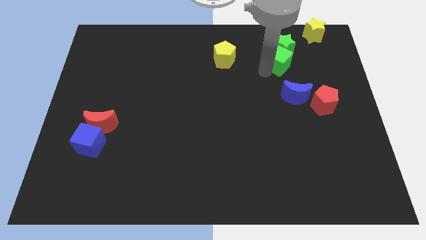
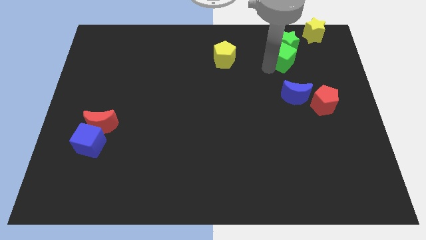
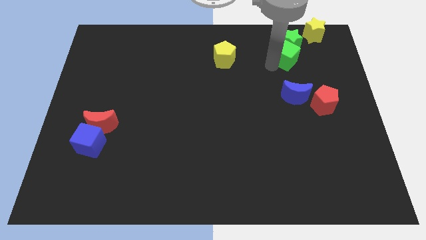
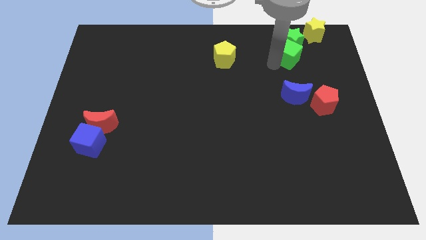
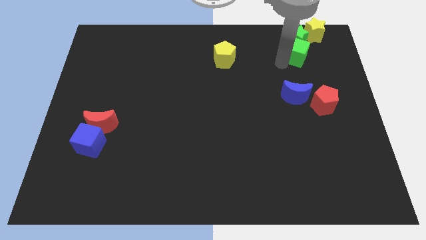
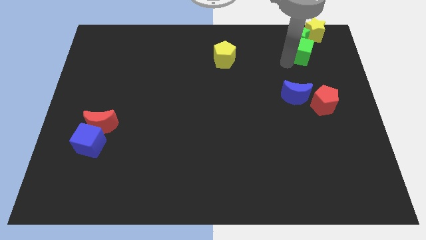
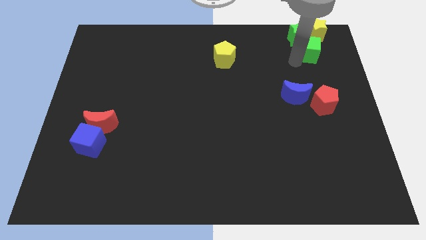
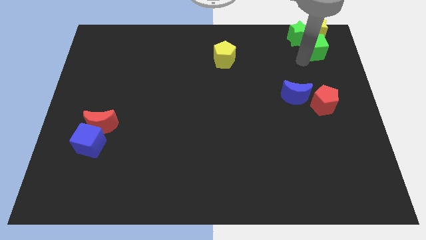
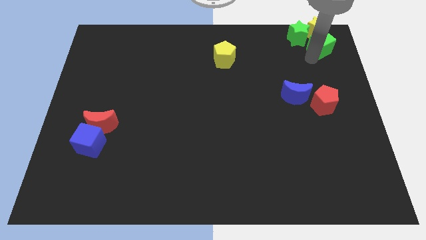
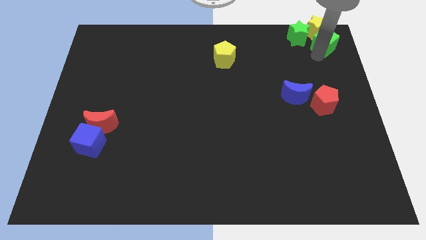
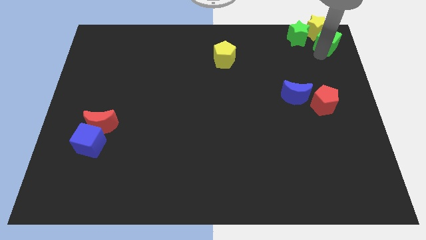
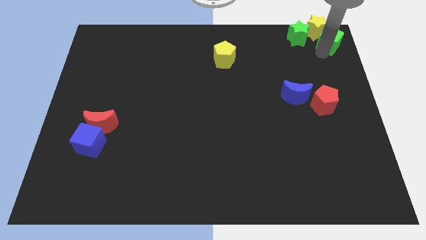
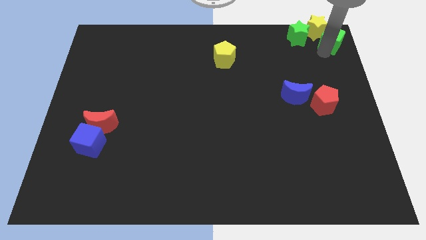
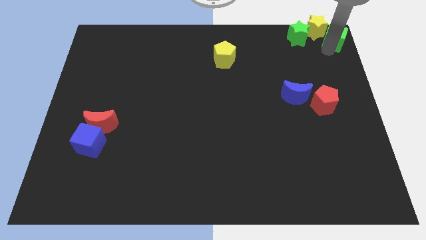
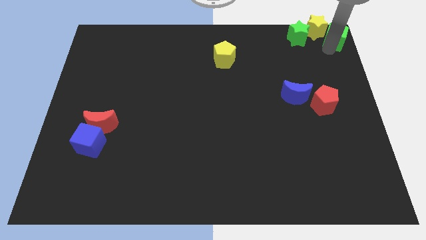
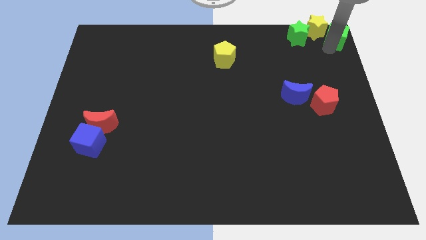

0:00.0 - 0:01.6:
push the green blocks to top right

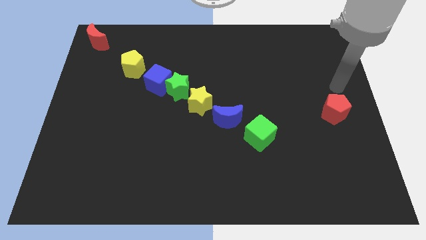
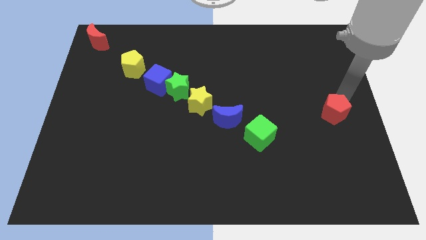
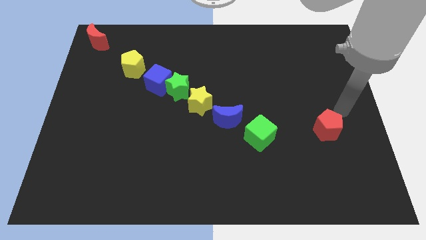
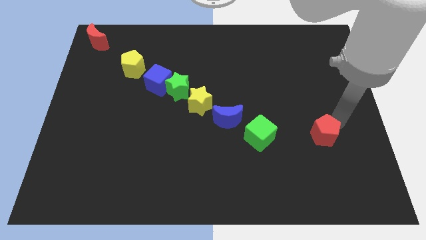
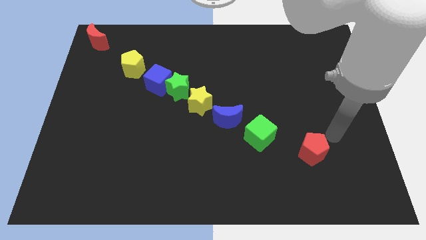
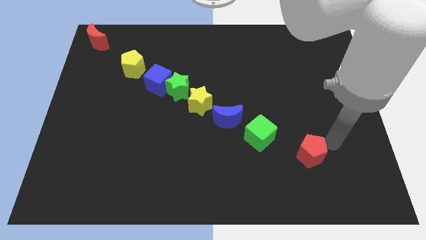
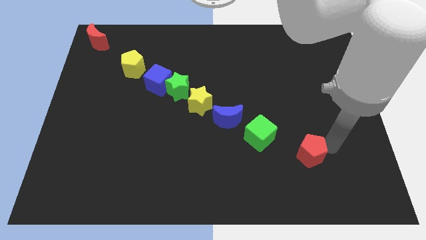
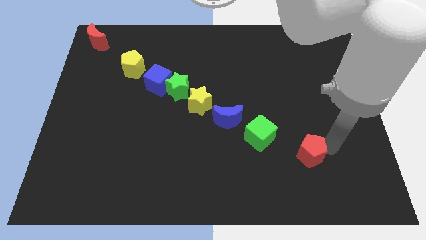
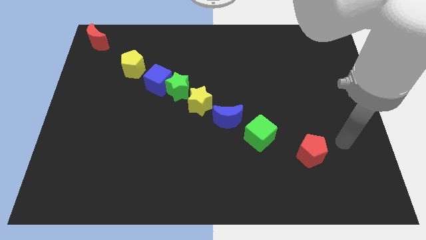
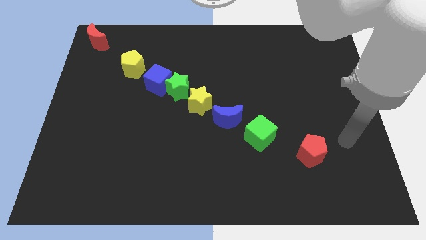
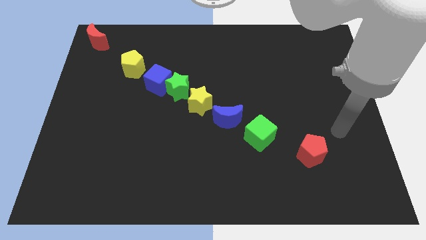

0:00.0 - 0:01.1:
move the red pentagon diagonally below the green cube

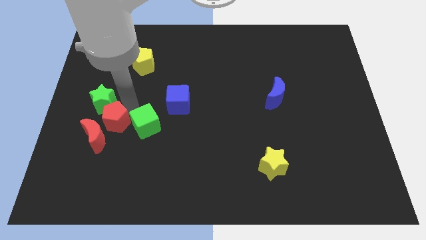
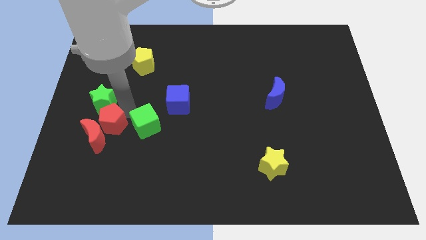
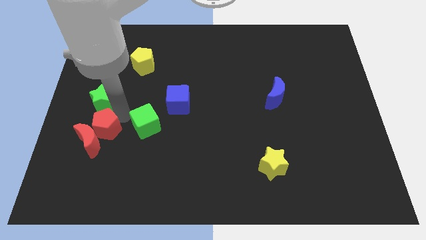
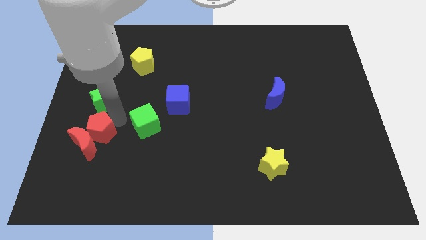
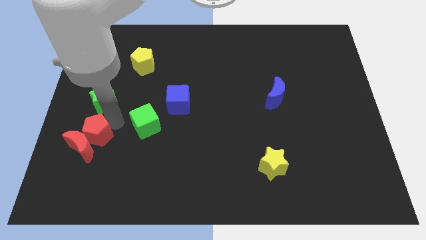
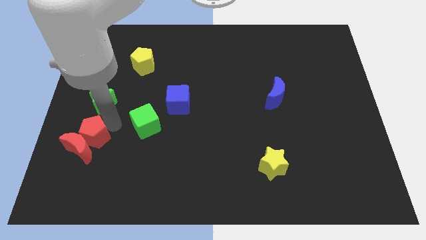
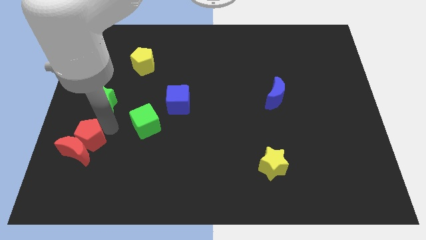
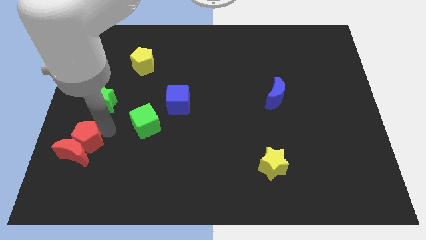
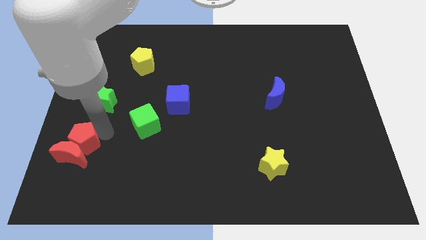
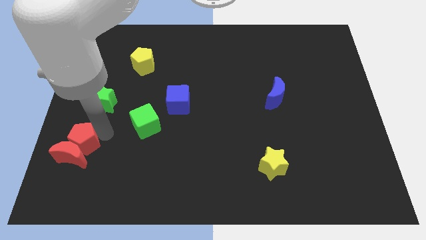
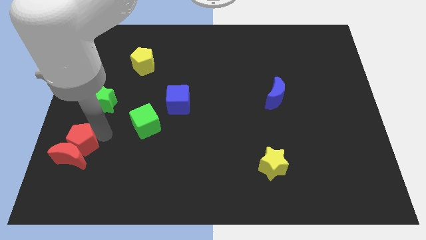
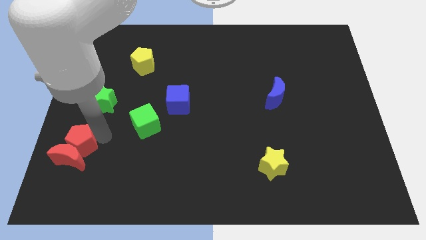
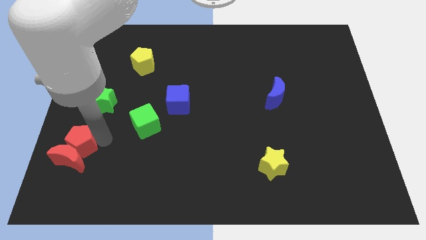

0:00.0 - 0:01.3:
separate red blocks from the green star

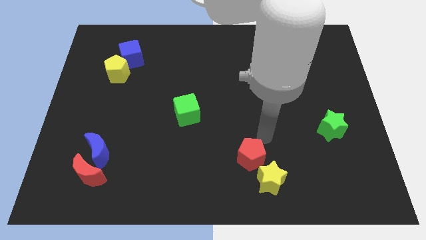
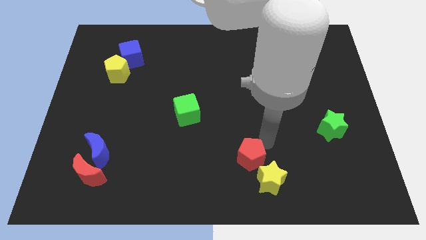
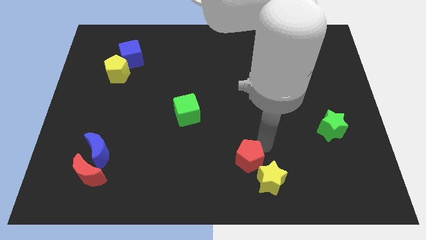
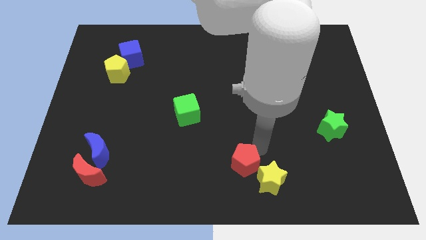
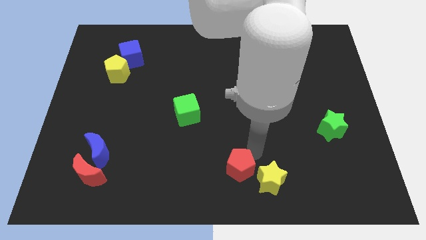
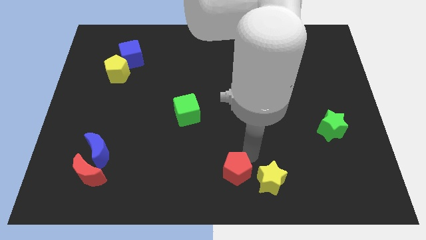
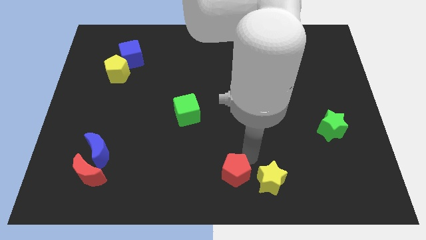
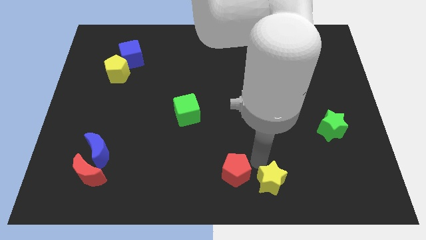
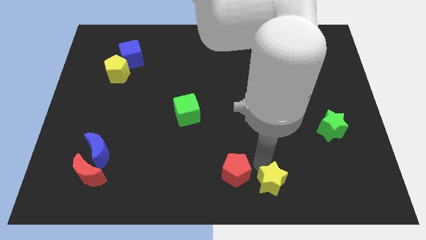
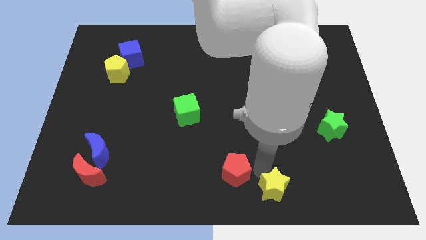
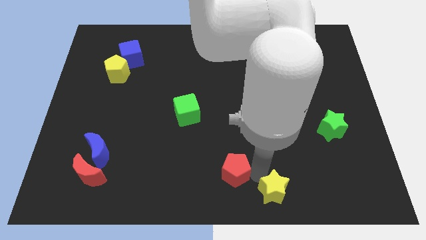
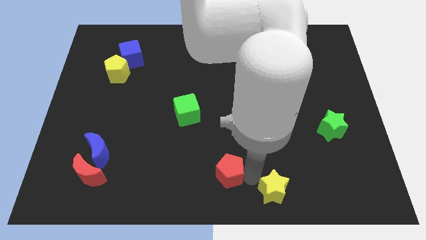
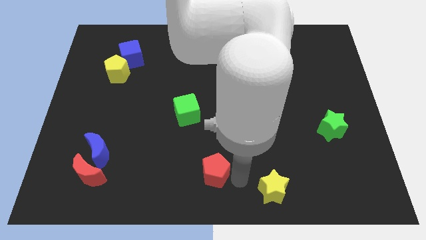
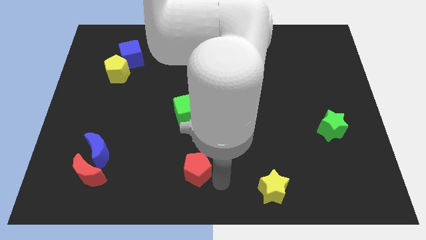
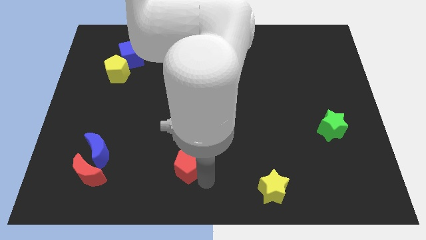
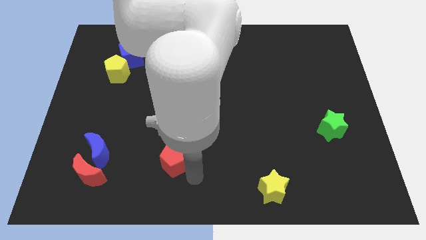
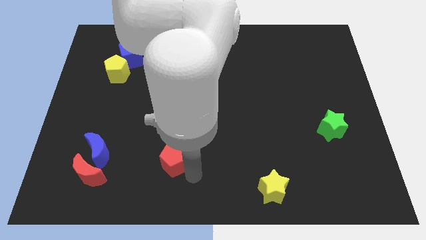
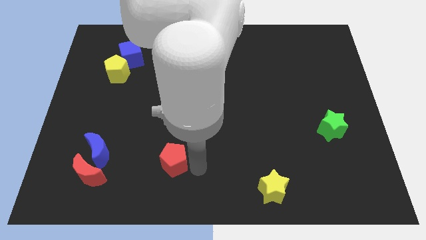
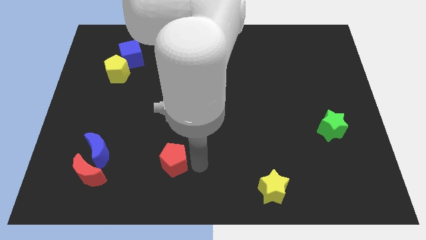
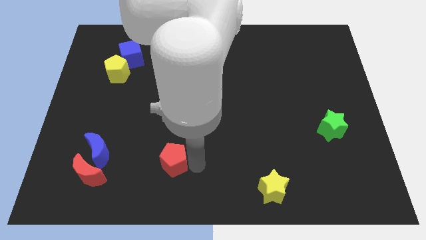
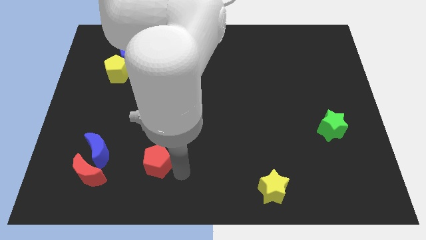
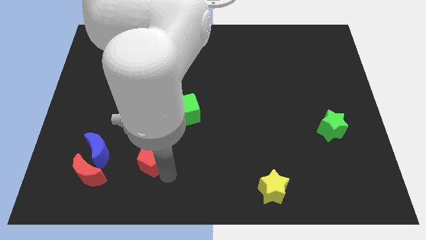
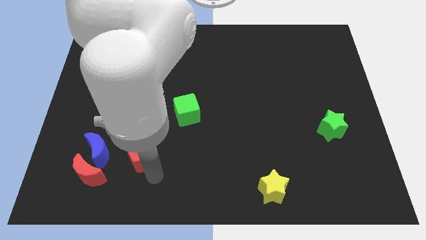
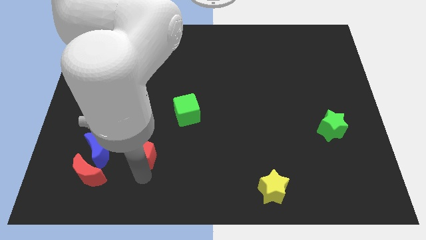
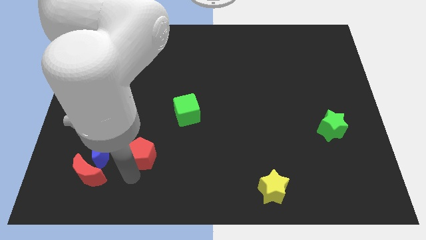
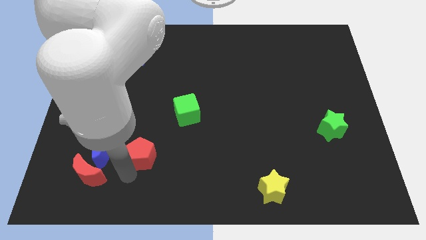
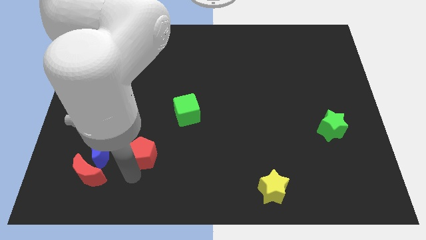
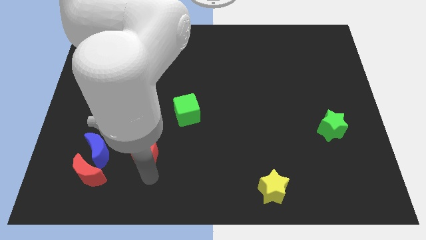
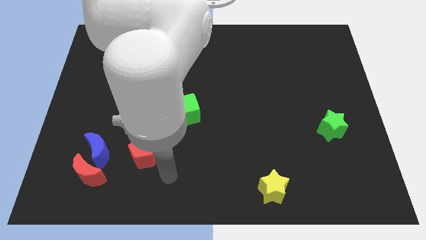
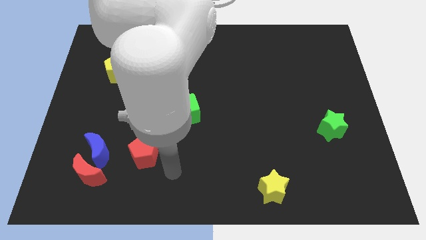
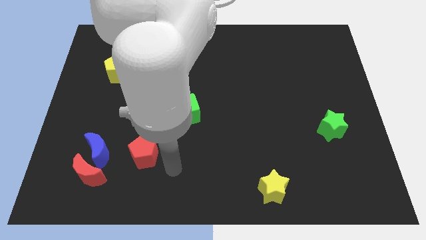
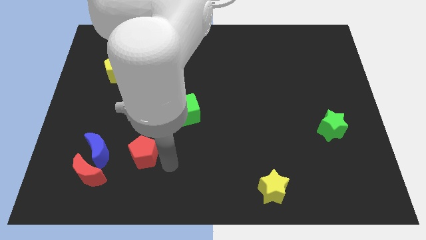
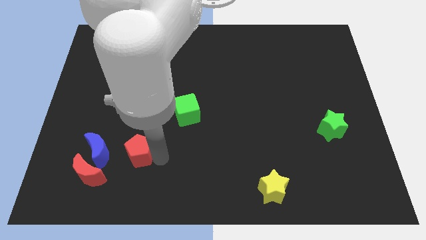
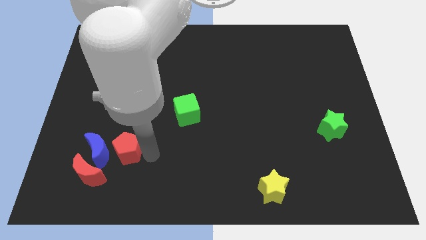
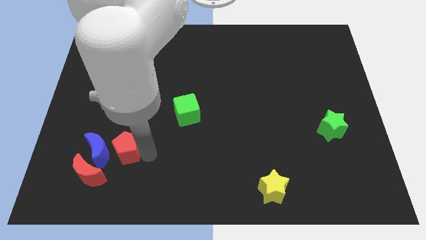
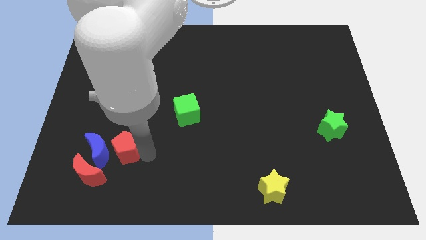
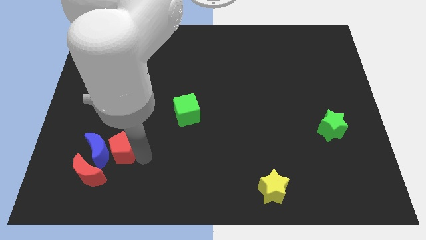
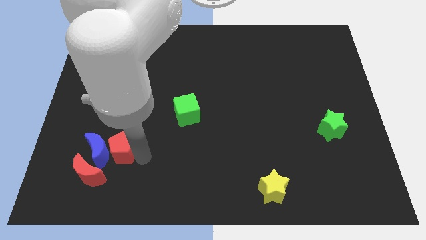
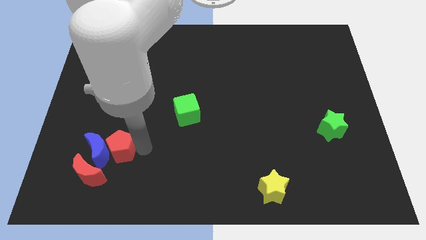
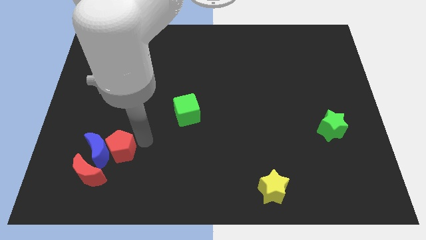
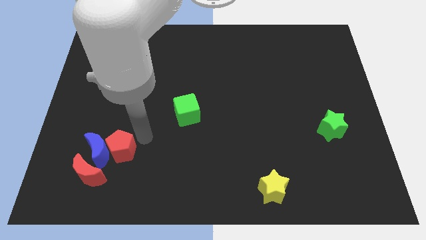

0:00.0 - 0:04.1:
push red pentagon to the right of blue moon

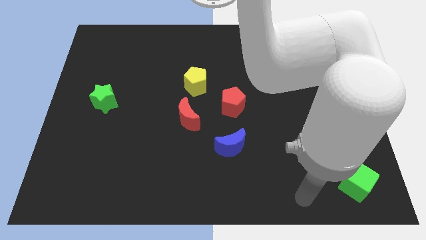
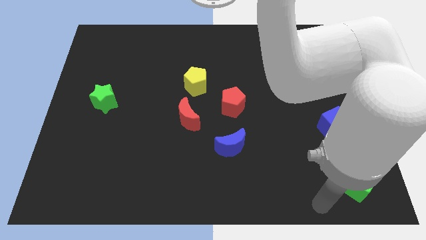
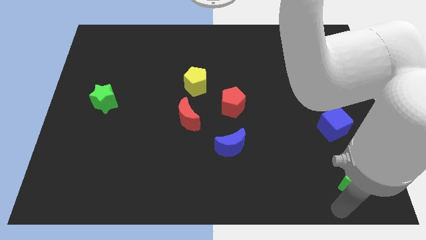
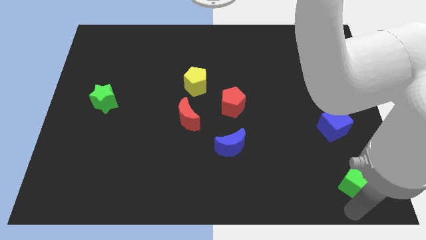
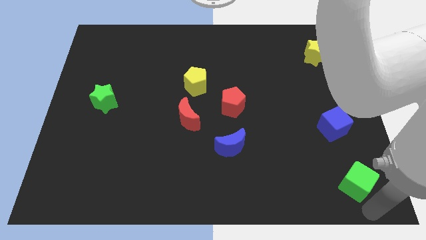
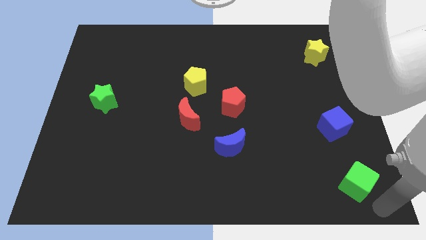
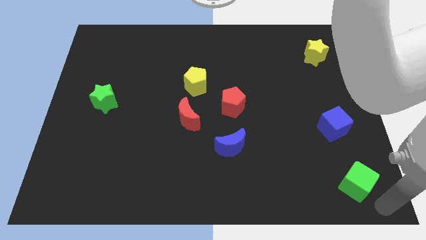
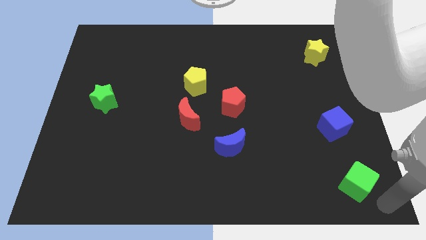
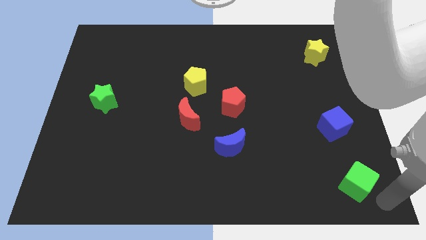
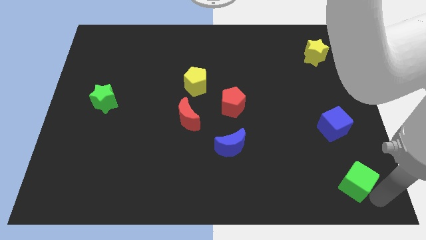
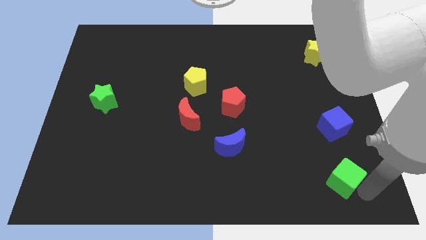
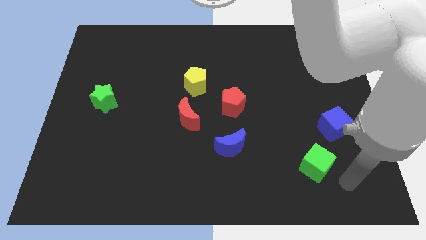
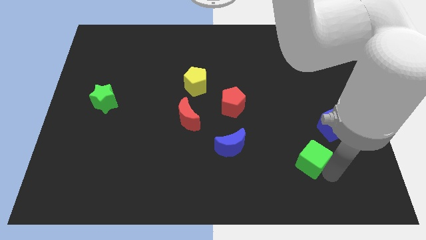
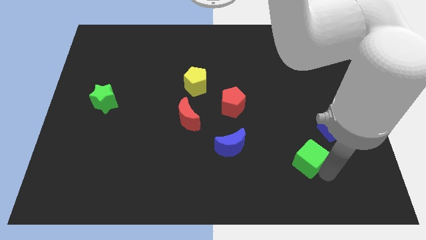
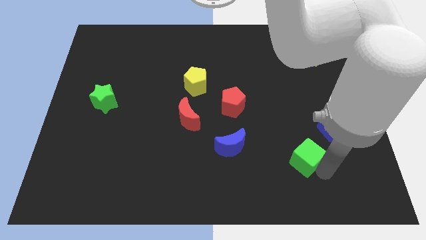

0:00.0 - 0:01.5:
place green cube to the bottom left of the blue cube
